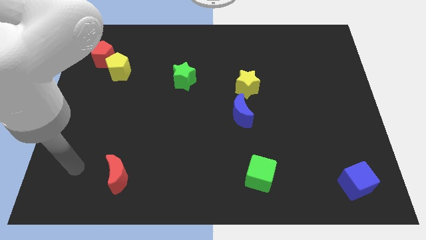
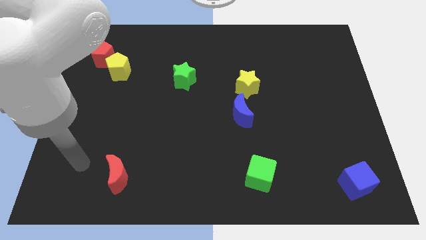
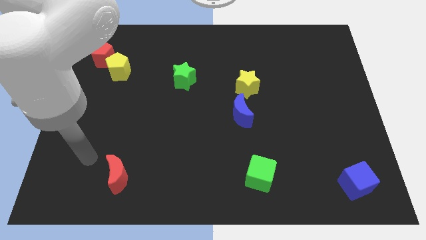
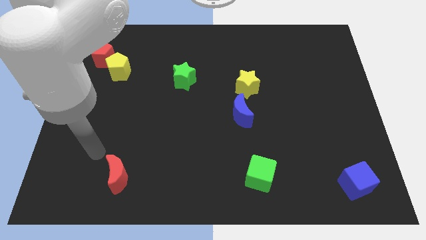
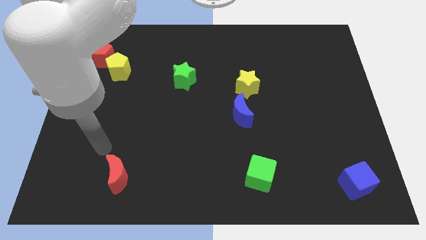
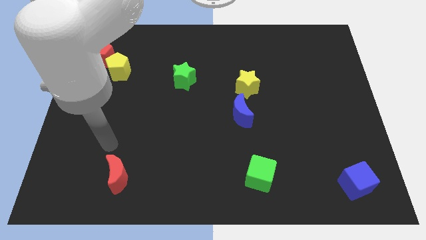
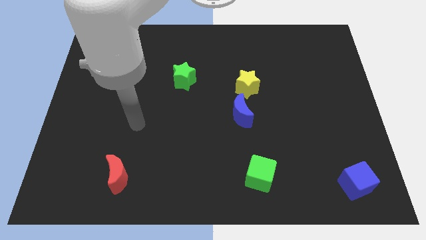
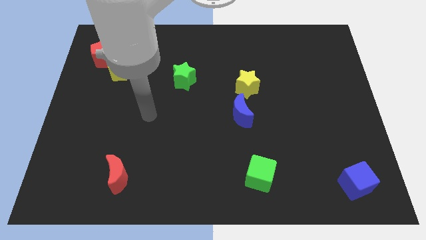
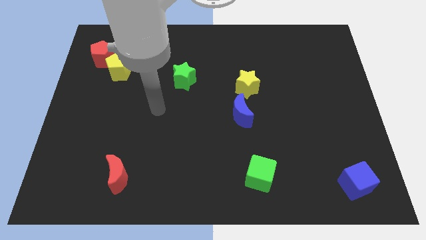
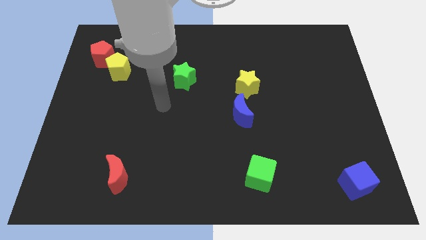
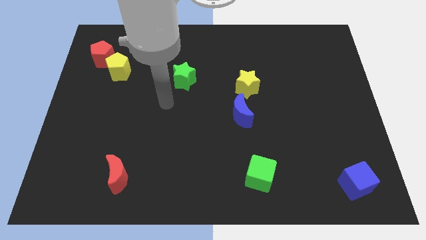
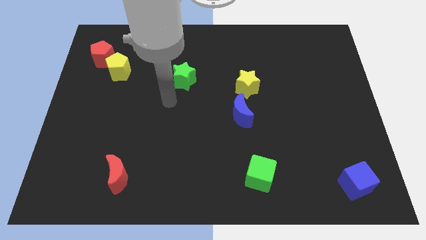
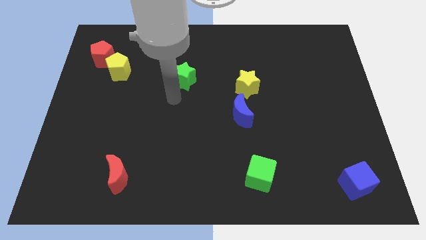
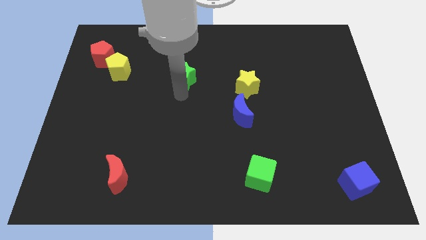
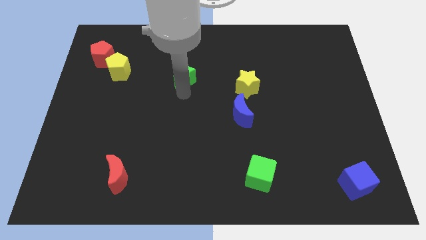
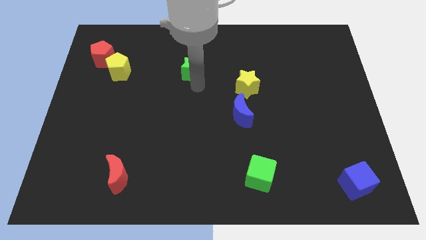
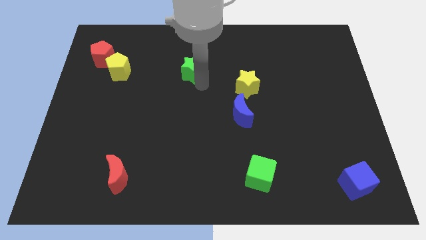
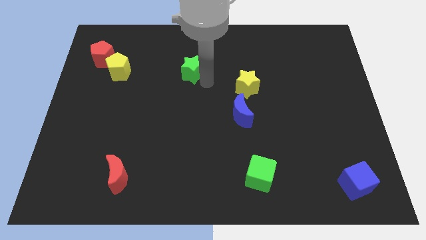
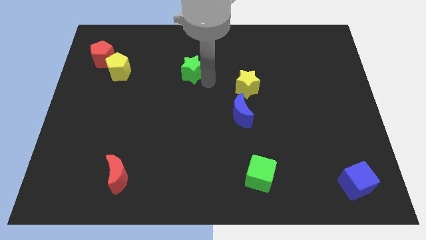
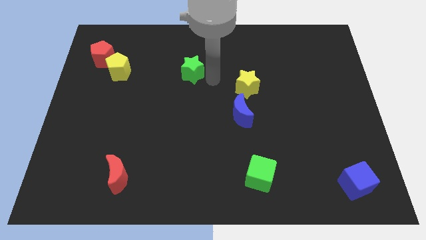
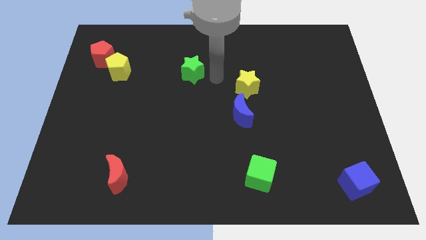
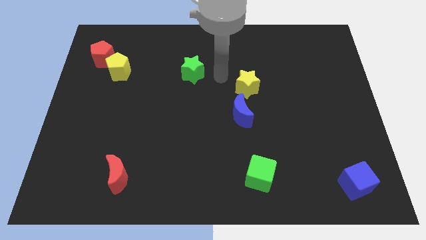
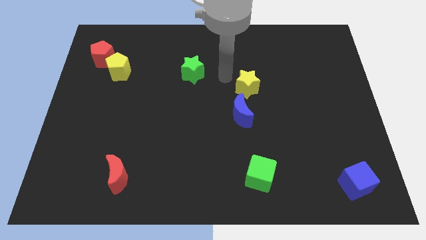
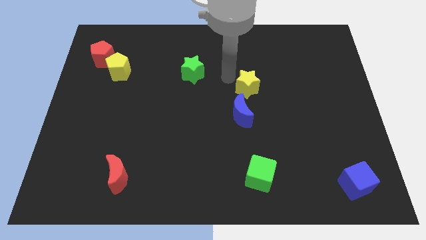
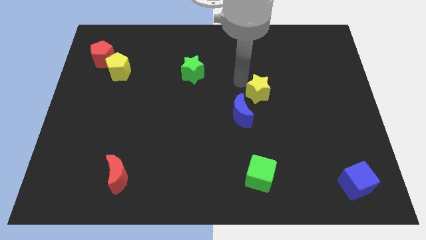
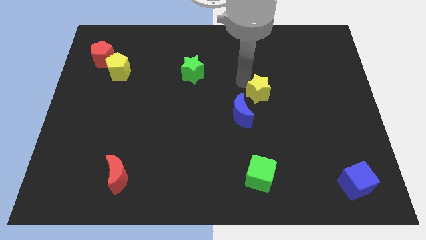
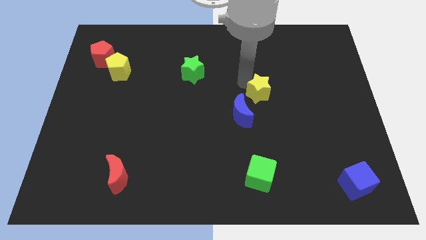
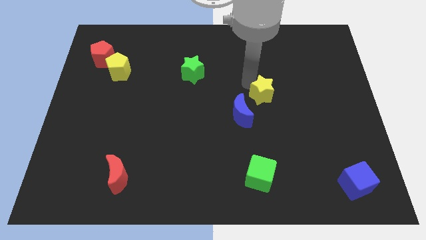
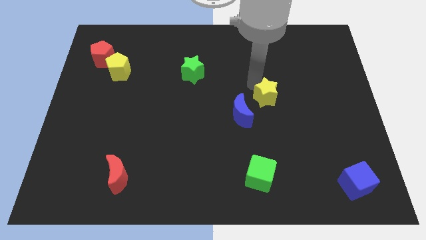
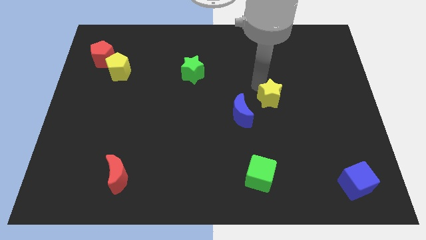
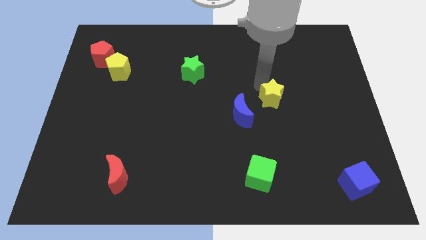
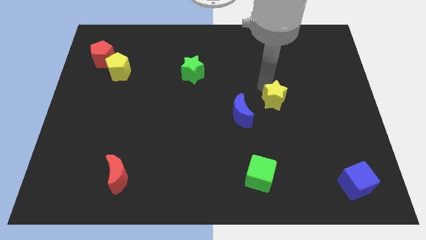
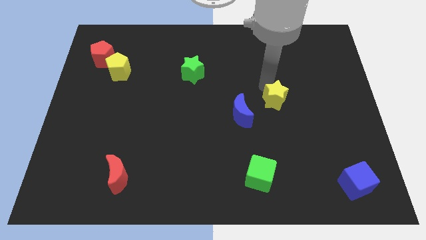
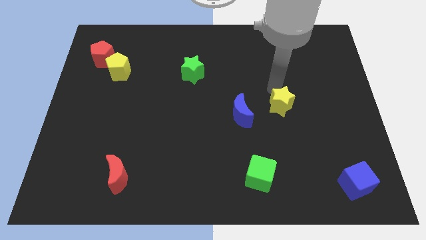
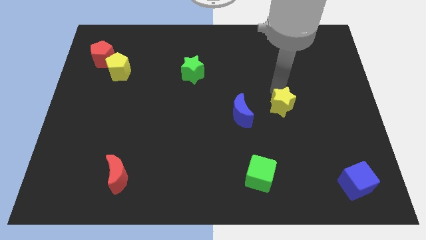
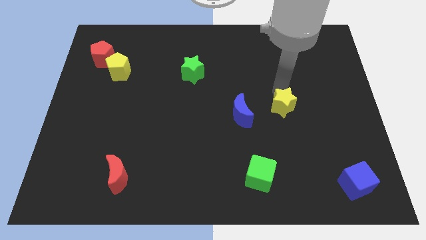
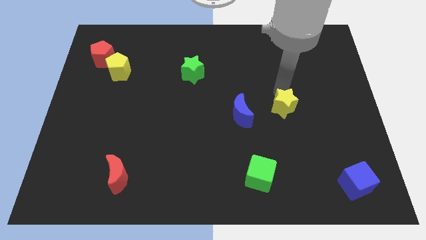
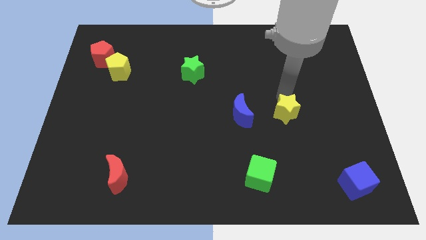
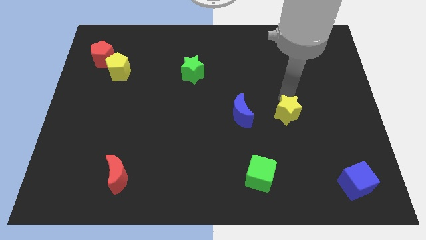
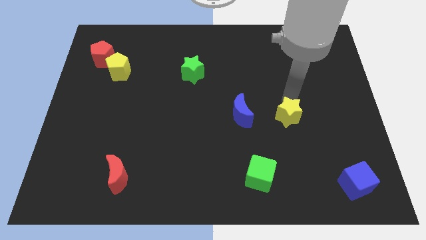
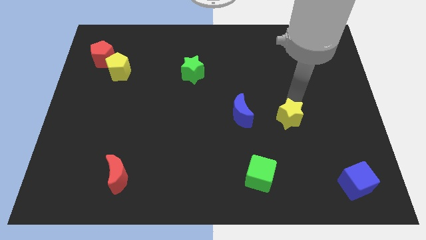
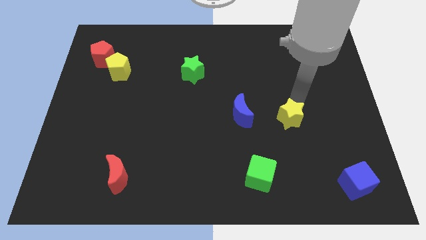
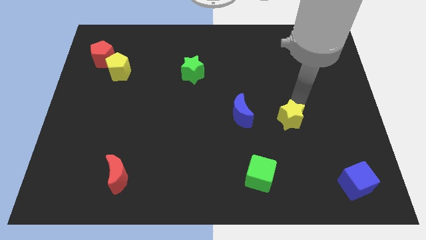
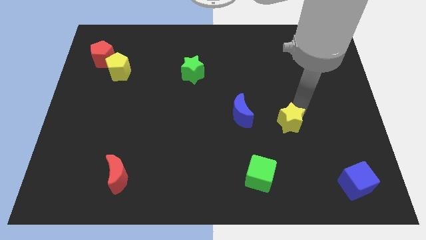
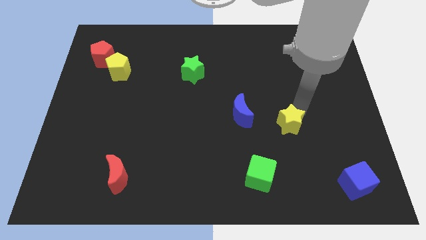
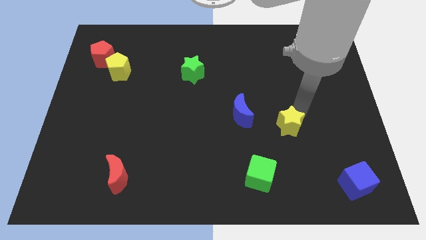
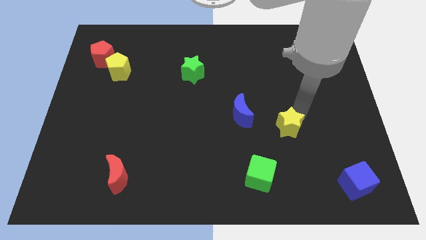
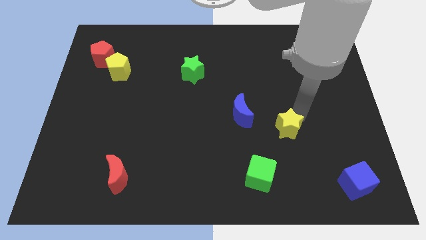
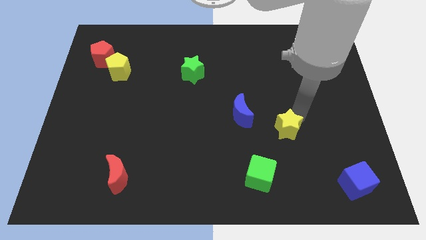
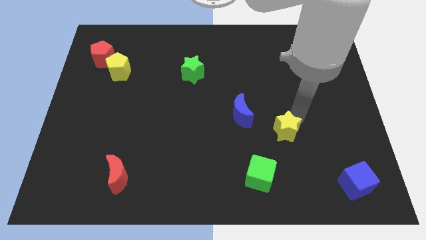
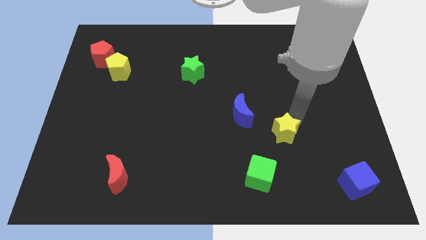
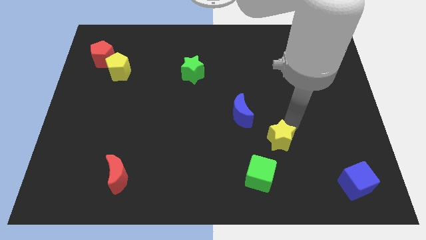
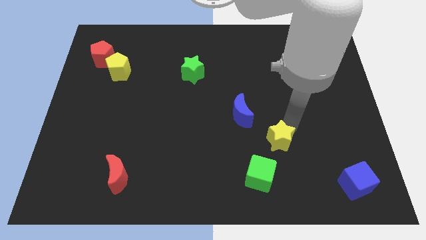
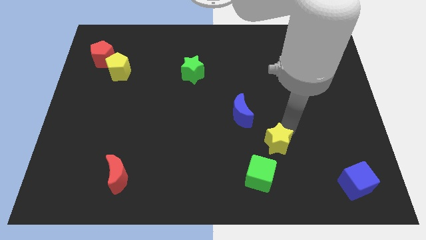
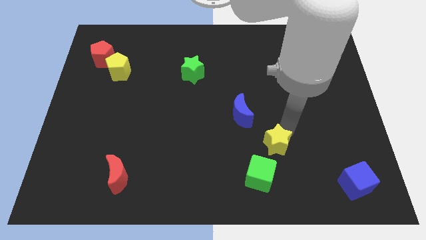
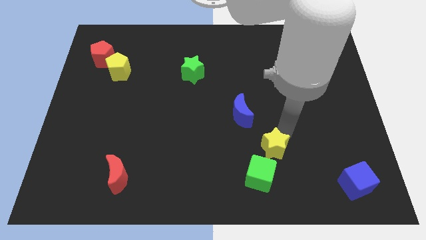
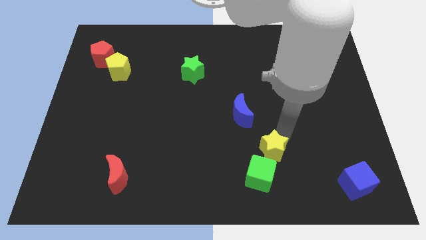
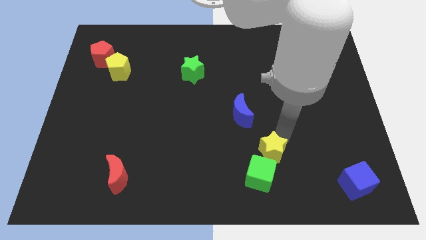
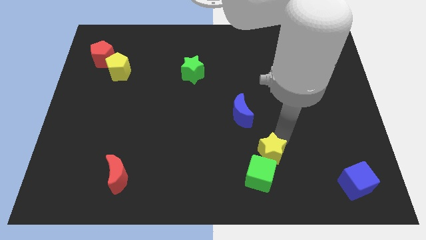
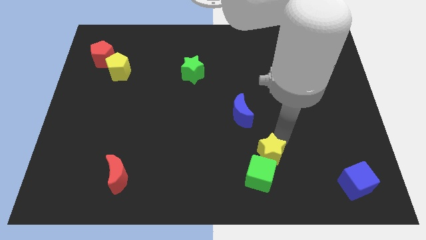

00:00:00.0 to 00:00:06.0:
move the yellow star to the green cube

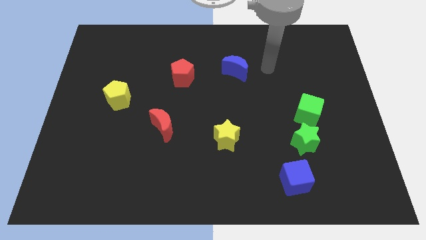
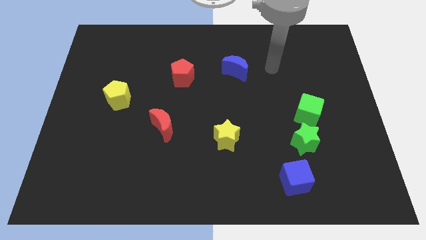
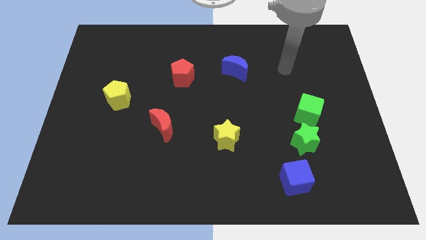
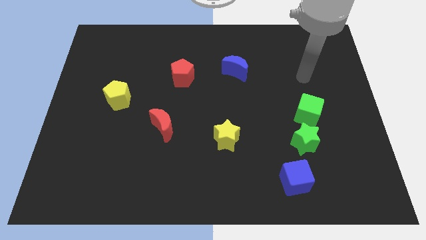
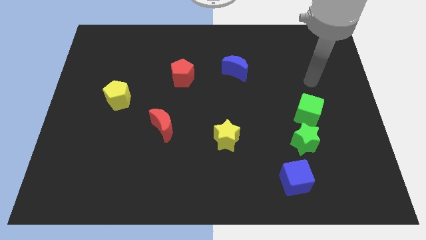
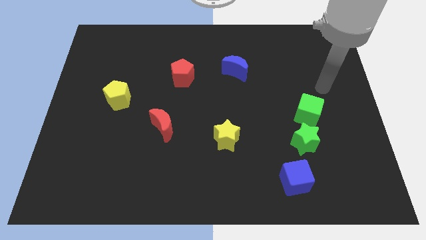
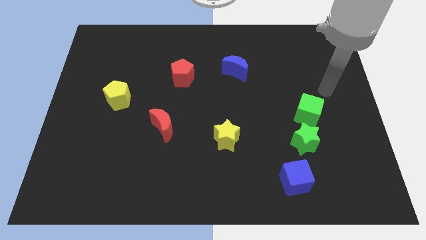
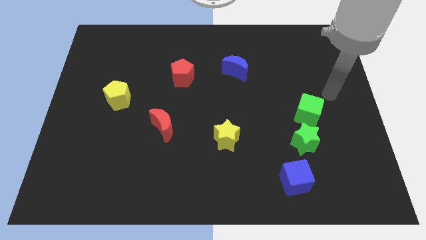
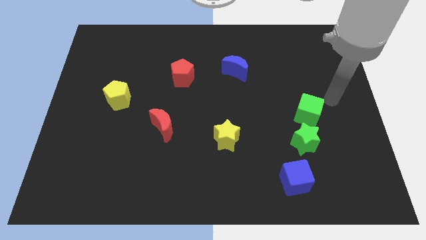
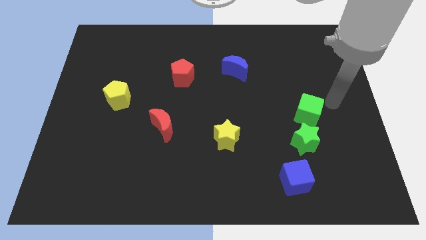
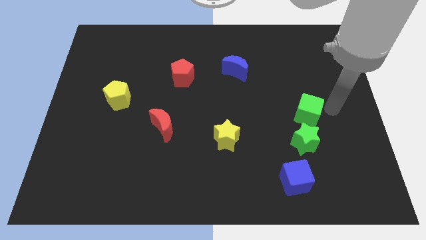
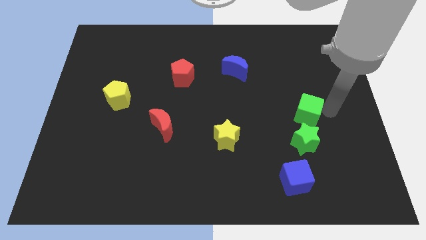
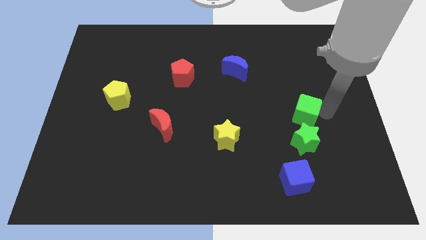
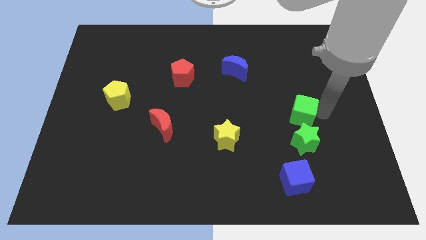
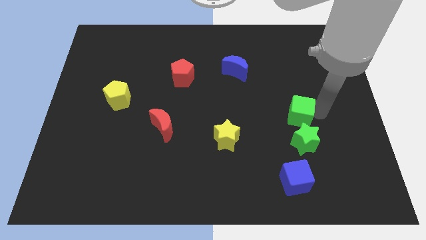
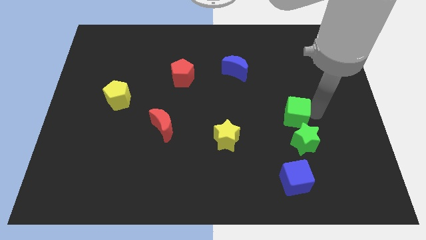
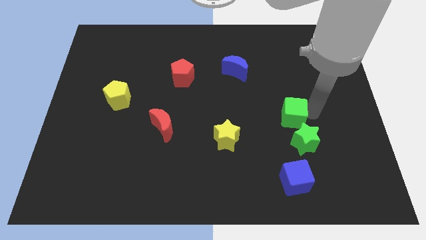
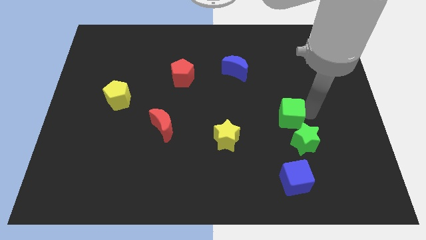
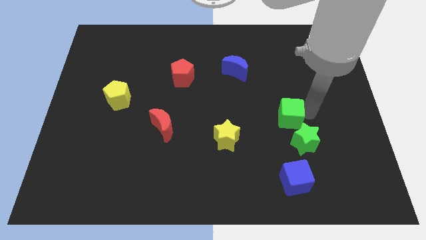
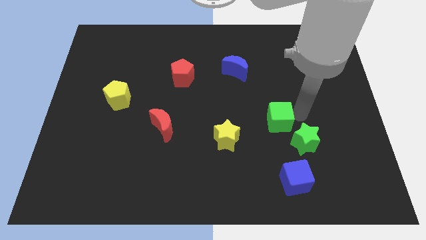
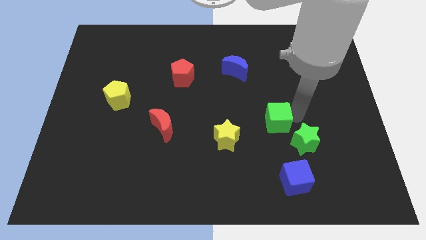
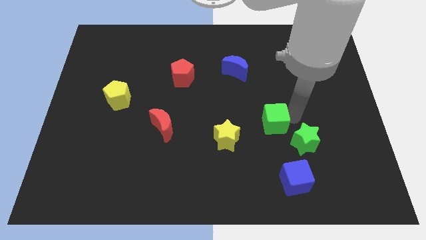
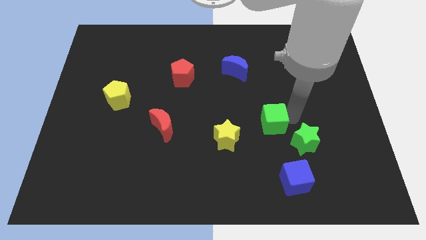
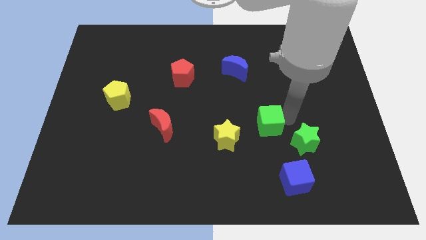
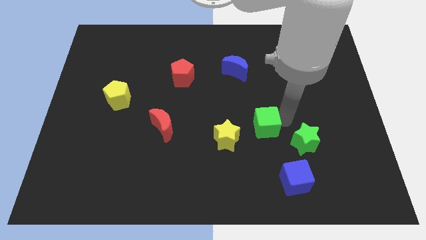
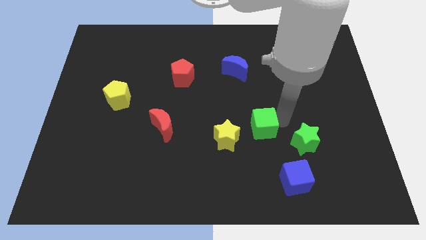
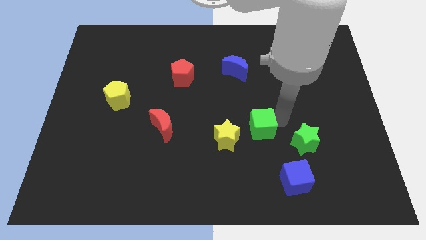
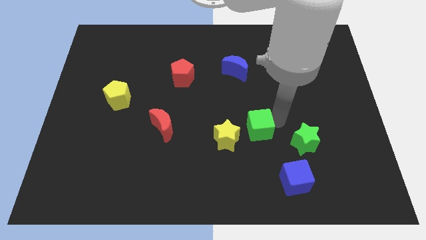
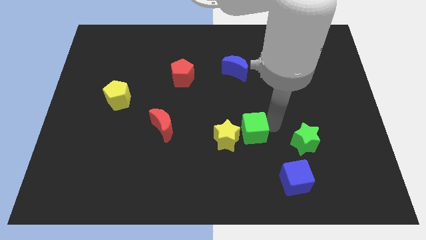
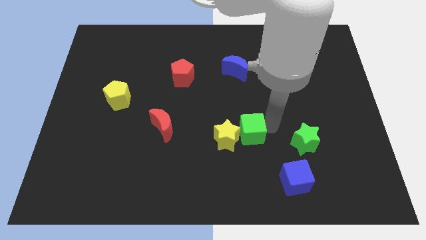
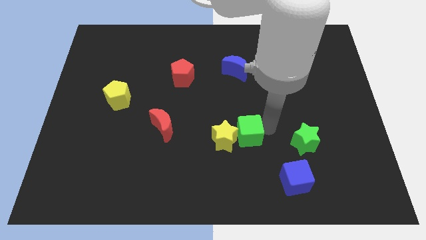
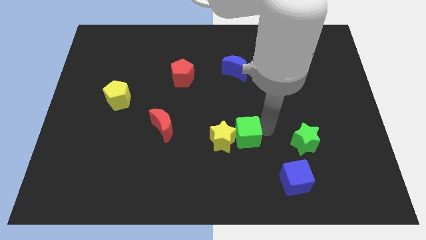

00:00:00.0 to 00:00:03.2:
slide the green cube close to the yellow star
